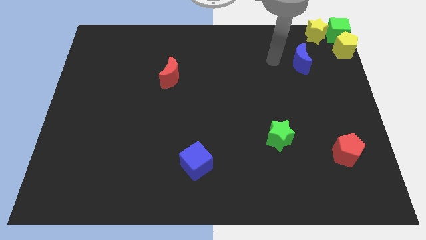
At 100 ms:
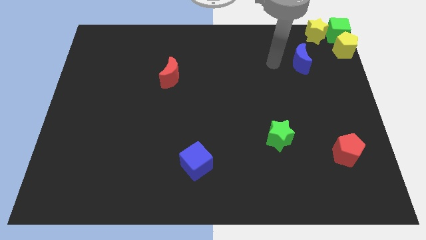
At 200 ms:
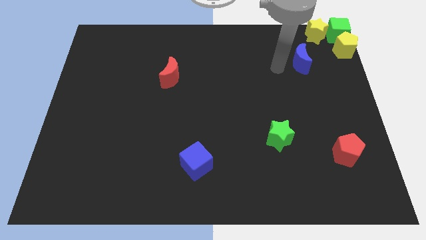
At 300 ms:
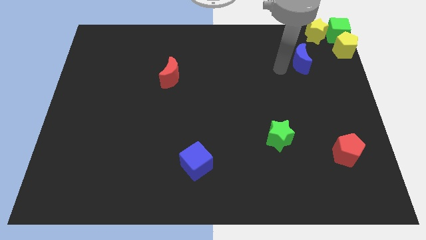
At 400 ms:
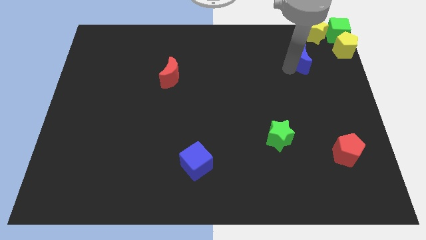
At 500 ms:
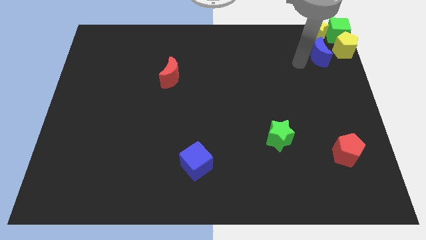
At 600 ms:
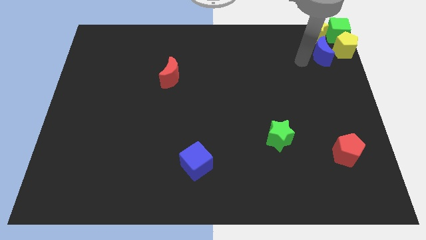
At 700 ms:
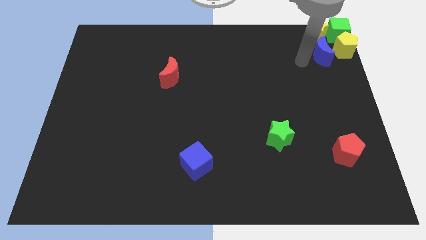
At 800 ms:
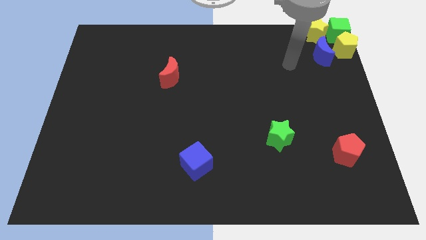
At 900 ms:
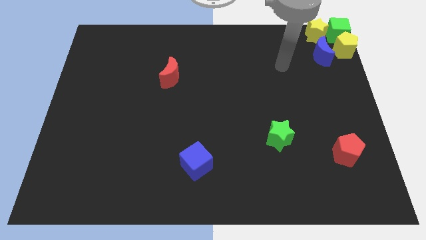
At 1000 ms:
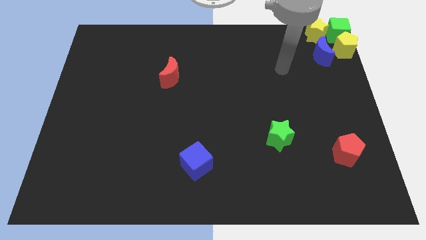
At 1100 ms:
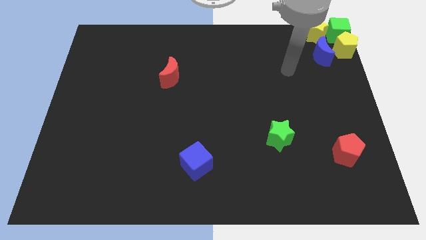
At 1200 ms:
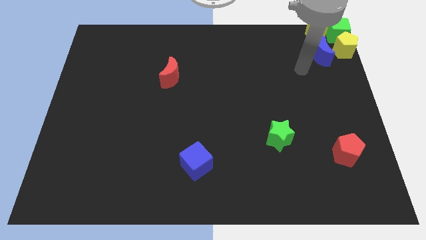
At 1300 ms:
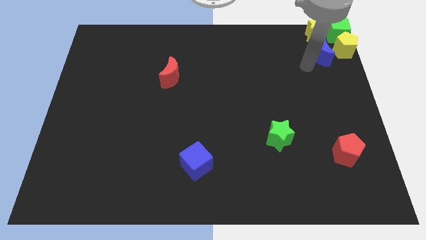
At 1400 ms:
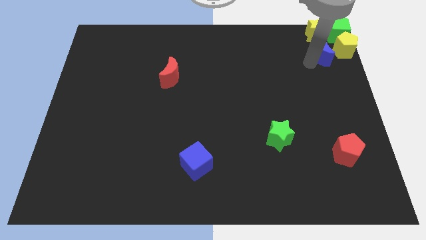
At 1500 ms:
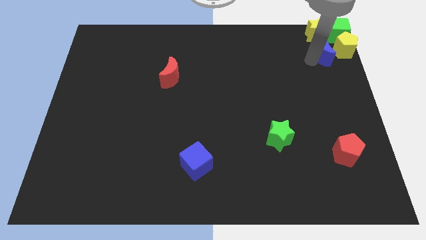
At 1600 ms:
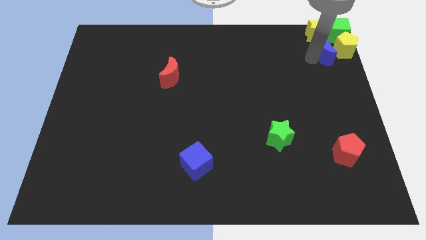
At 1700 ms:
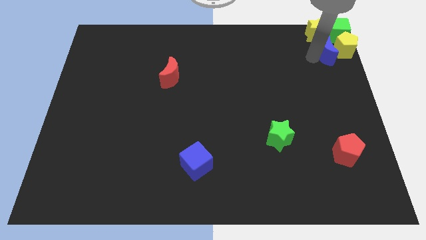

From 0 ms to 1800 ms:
push the blue moon towards yellow pentagon

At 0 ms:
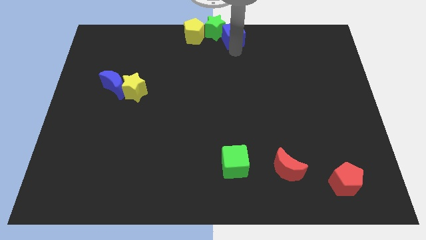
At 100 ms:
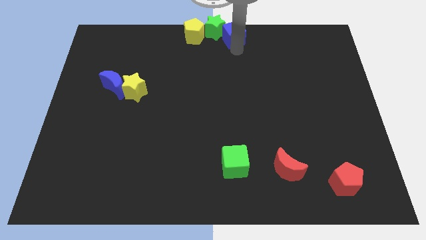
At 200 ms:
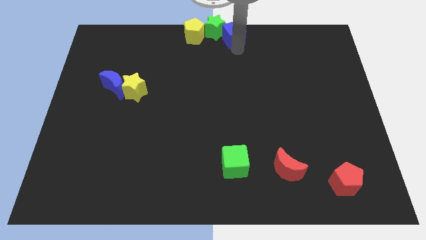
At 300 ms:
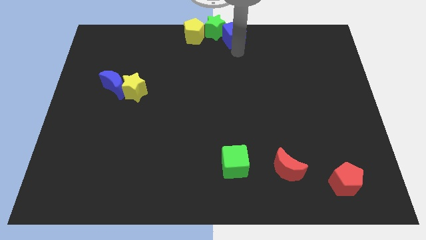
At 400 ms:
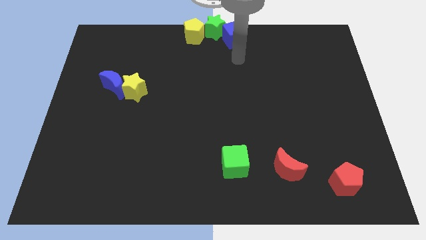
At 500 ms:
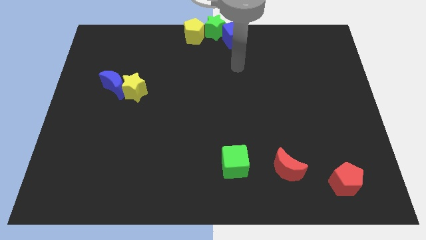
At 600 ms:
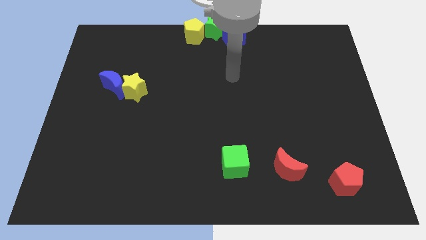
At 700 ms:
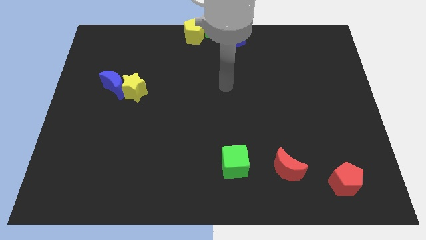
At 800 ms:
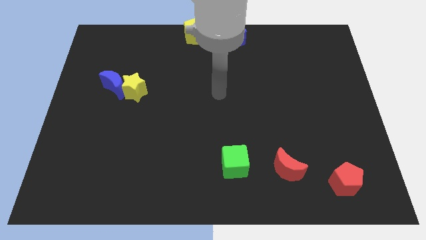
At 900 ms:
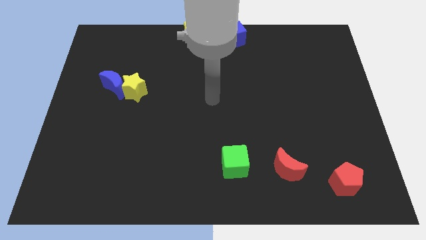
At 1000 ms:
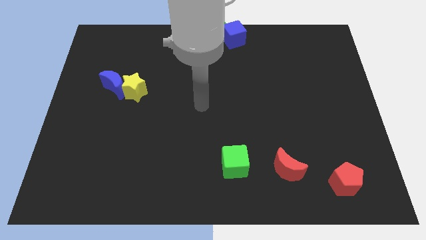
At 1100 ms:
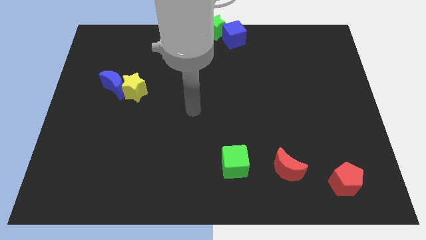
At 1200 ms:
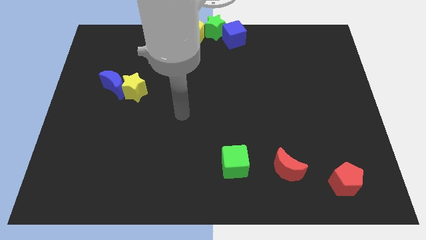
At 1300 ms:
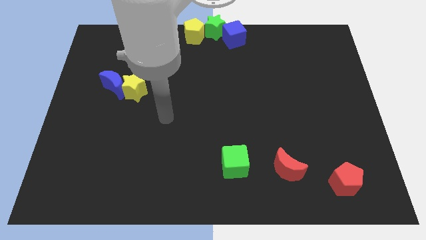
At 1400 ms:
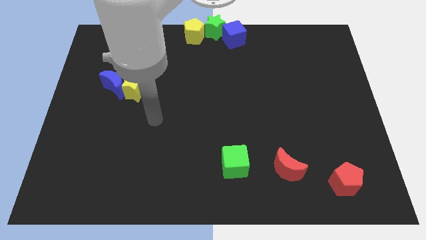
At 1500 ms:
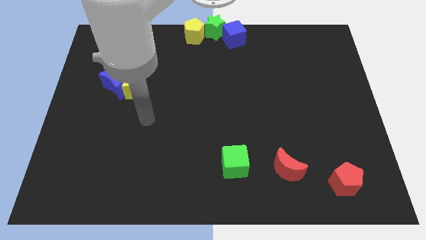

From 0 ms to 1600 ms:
move yourself away from the blue cube

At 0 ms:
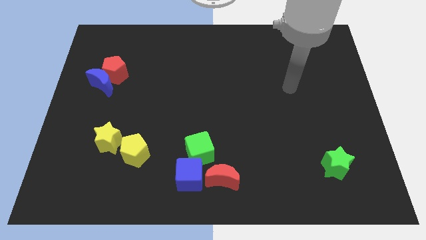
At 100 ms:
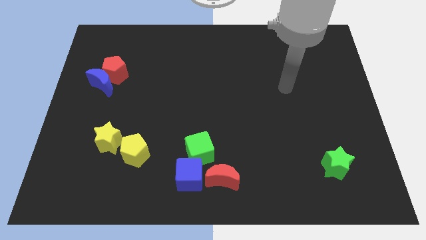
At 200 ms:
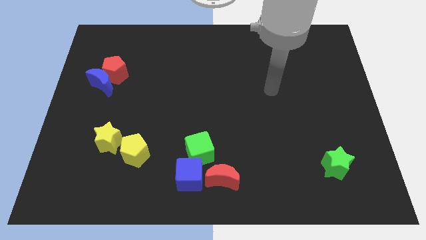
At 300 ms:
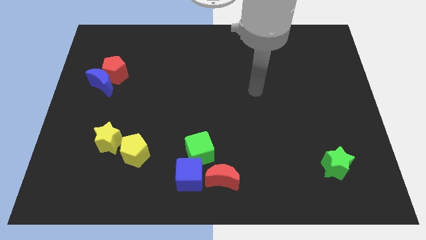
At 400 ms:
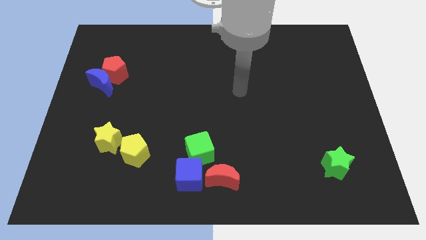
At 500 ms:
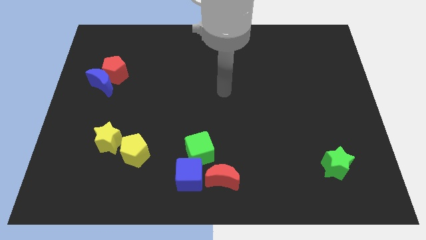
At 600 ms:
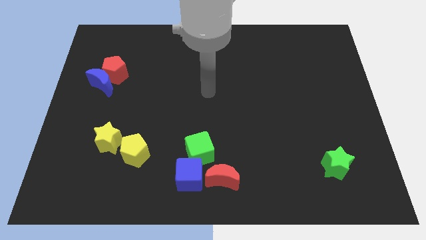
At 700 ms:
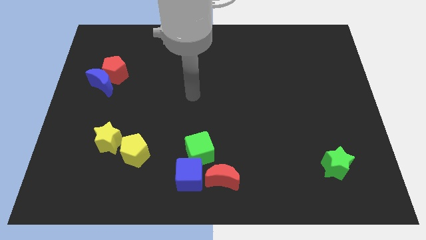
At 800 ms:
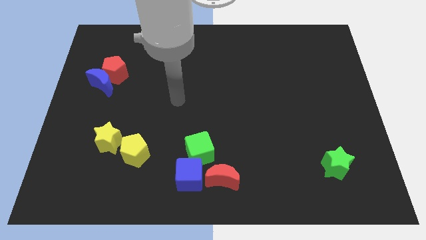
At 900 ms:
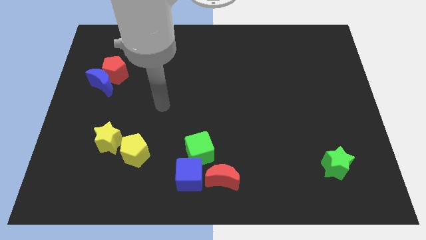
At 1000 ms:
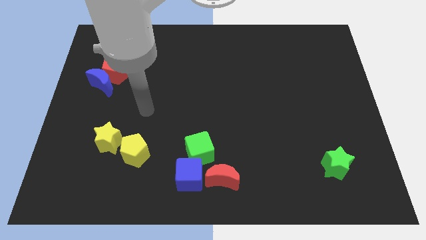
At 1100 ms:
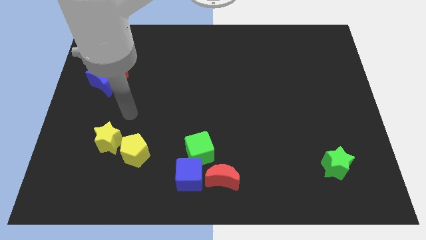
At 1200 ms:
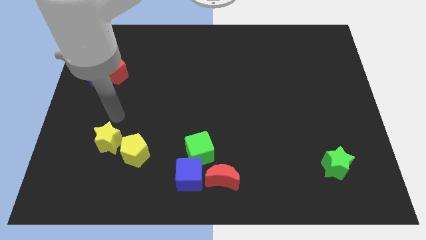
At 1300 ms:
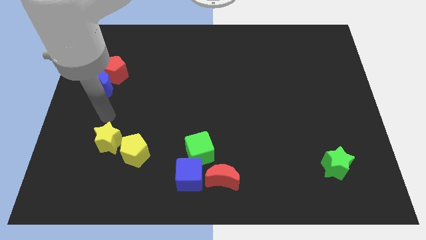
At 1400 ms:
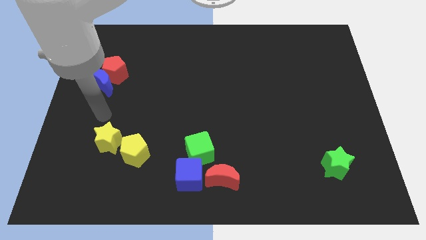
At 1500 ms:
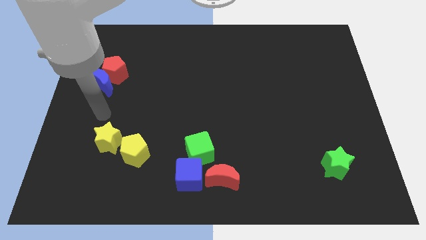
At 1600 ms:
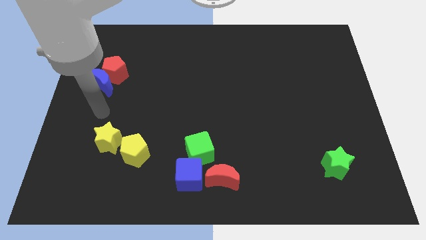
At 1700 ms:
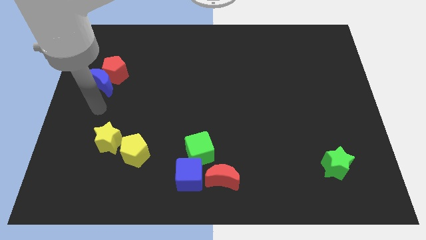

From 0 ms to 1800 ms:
move the arm to the left side of the board

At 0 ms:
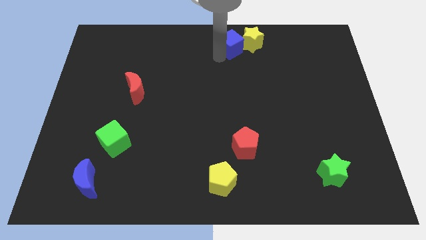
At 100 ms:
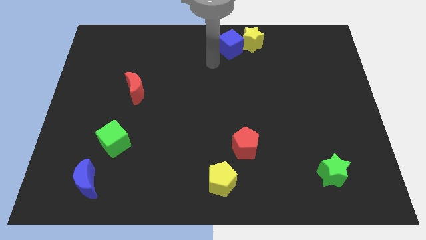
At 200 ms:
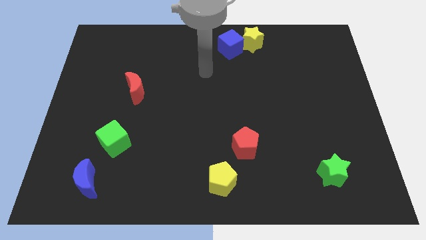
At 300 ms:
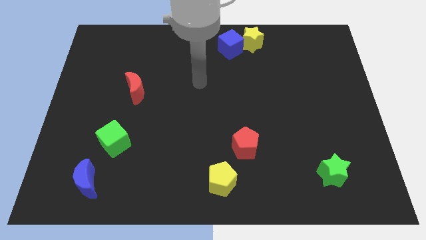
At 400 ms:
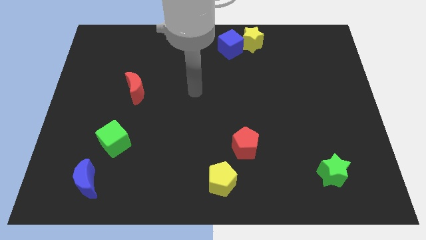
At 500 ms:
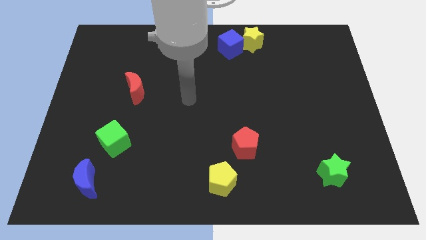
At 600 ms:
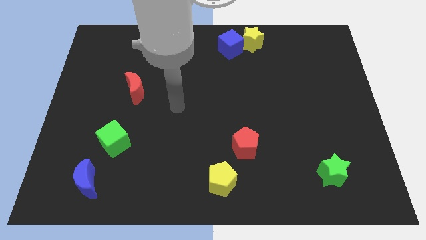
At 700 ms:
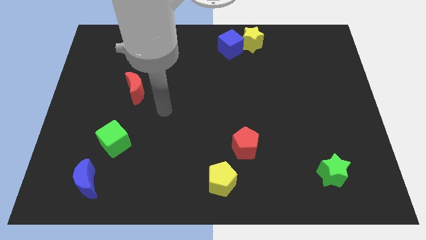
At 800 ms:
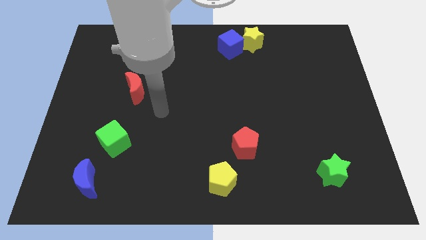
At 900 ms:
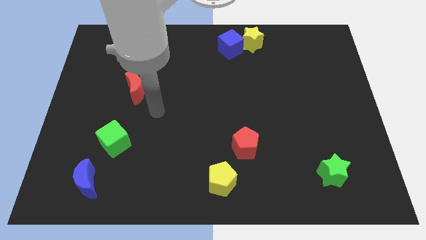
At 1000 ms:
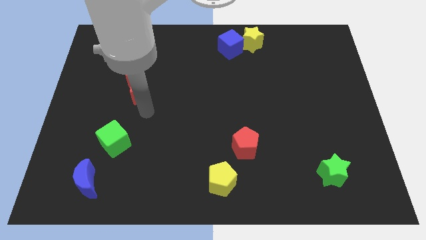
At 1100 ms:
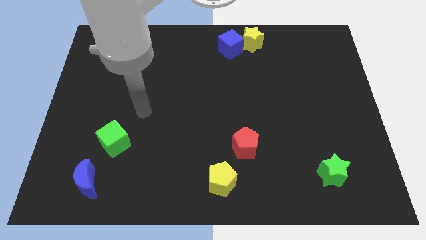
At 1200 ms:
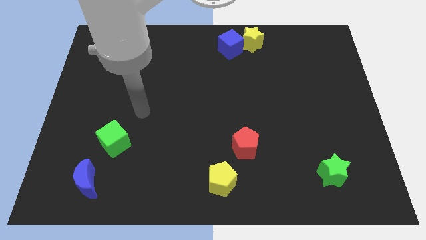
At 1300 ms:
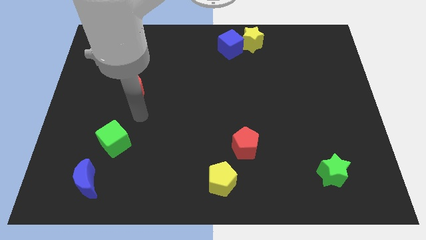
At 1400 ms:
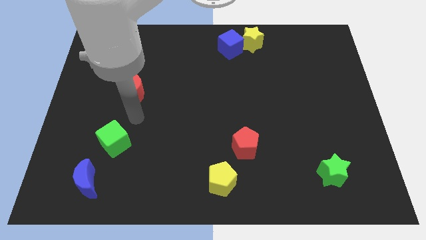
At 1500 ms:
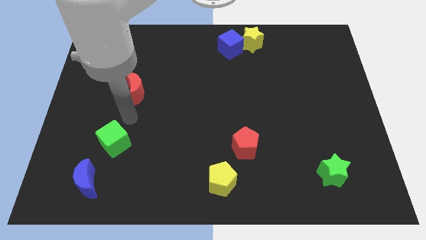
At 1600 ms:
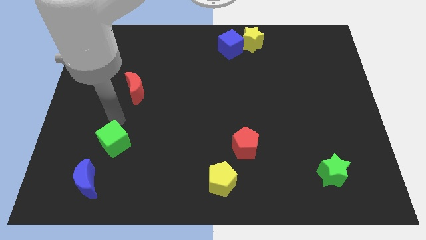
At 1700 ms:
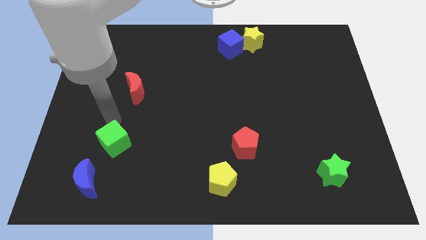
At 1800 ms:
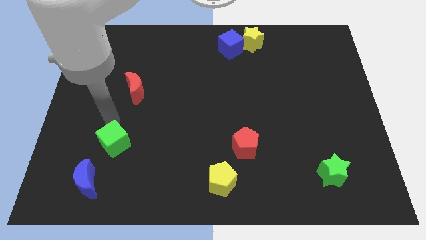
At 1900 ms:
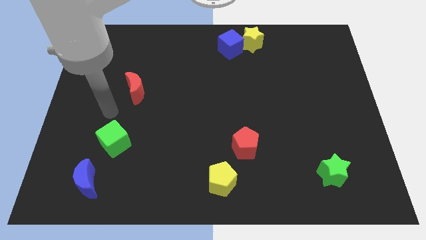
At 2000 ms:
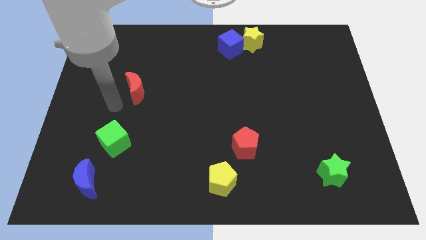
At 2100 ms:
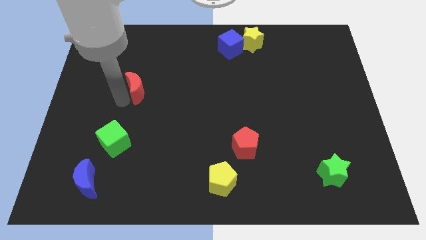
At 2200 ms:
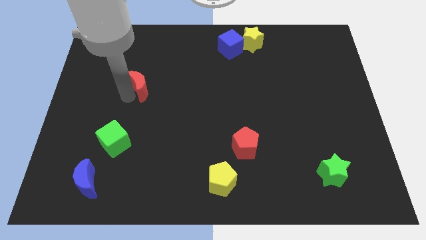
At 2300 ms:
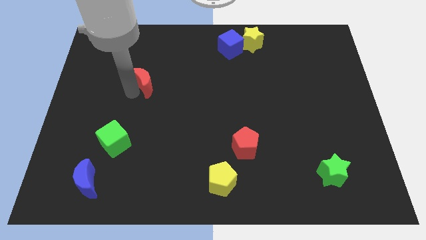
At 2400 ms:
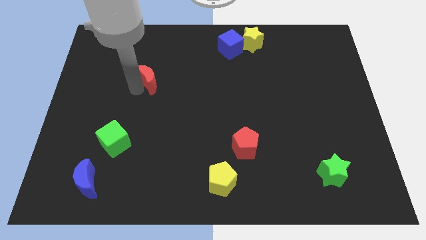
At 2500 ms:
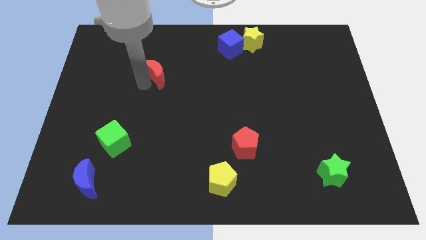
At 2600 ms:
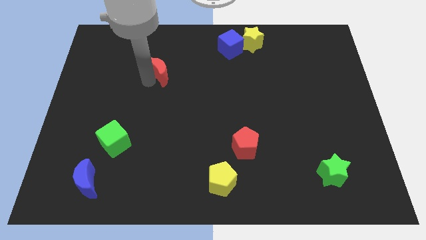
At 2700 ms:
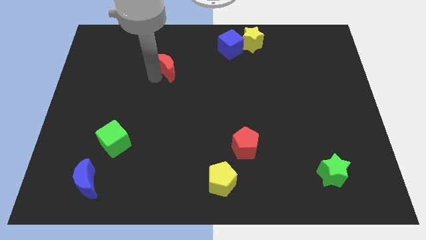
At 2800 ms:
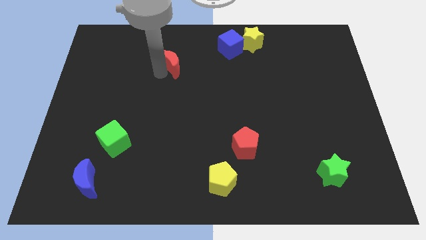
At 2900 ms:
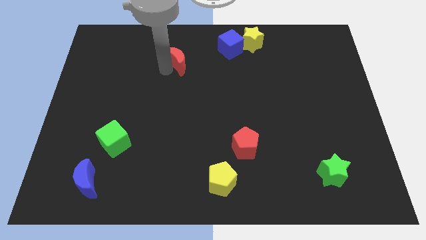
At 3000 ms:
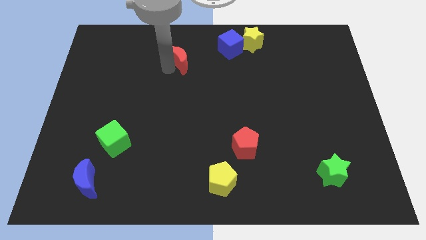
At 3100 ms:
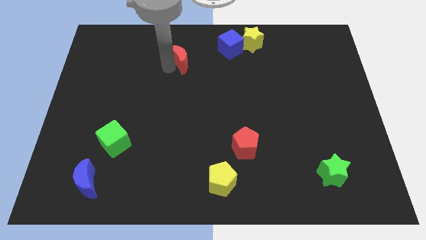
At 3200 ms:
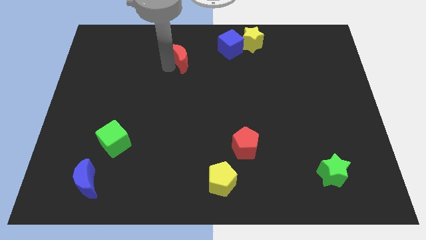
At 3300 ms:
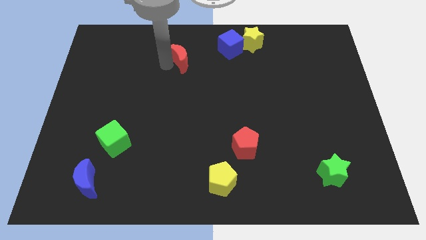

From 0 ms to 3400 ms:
move the red moon towards the left side of the blue cube

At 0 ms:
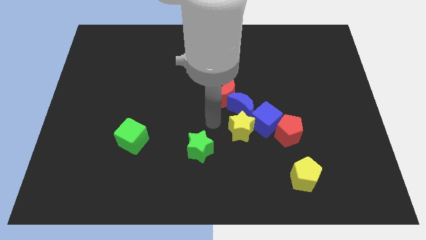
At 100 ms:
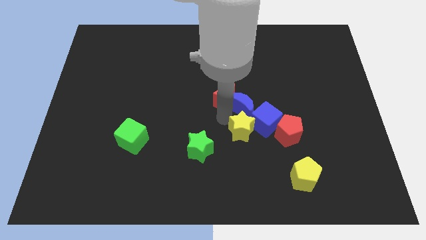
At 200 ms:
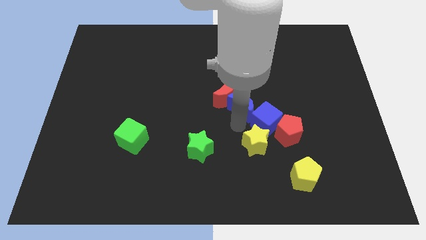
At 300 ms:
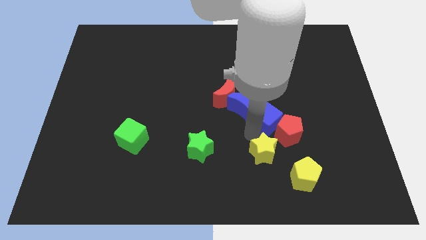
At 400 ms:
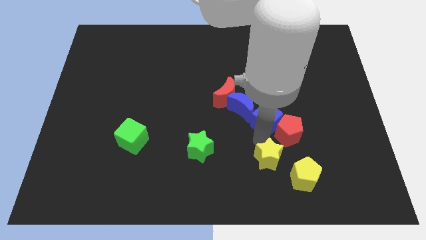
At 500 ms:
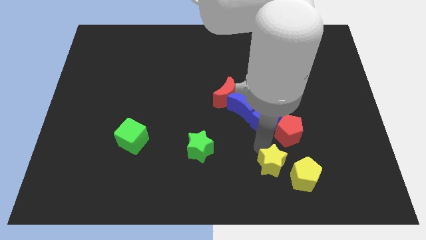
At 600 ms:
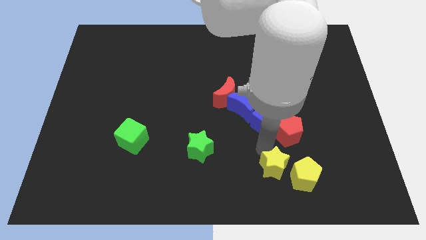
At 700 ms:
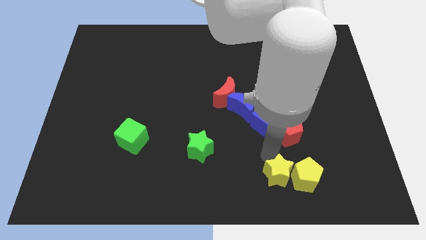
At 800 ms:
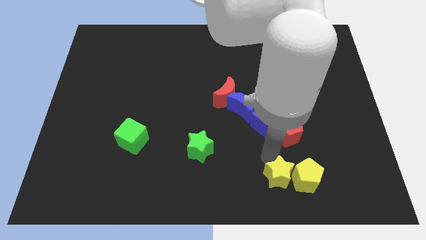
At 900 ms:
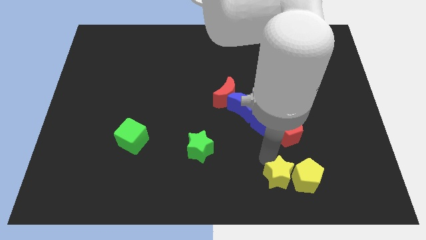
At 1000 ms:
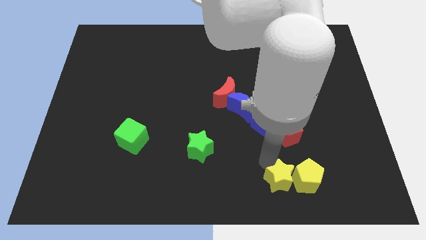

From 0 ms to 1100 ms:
move the yellow star to the left side of the green star
